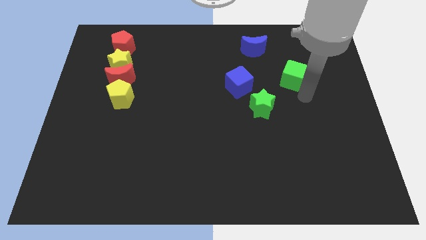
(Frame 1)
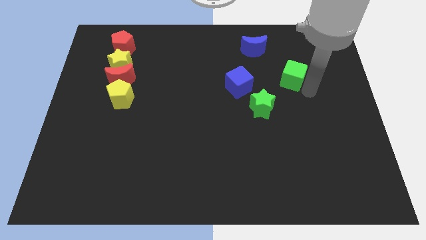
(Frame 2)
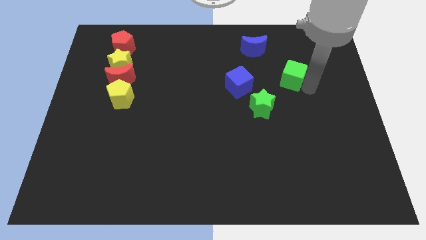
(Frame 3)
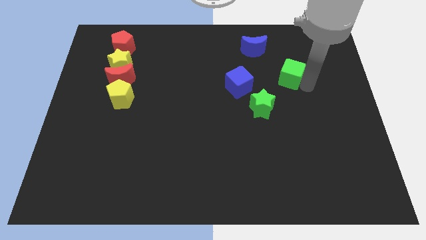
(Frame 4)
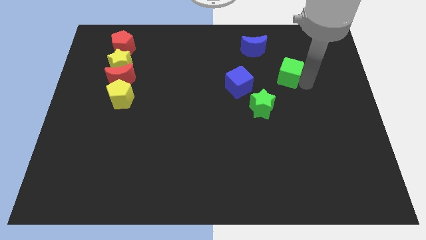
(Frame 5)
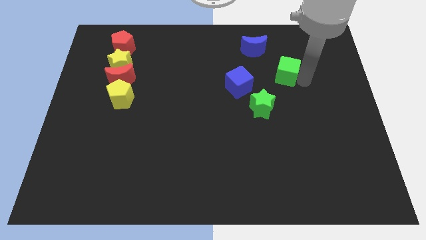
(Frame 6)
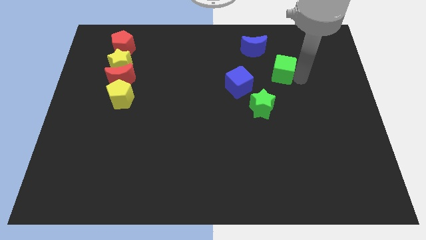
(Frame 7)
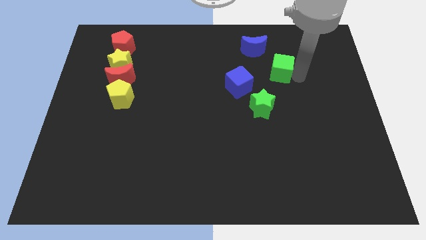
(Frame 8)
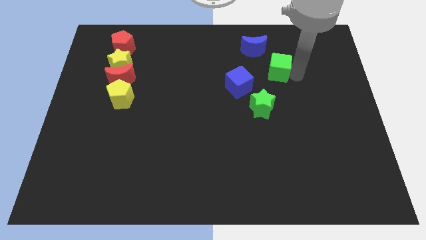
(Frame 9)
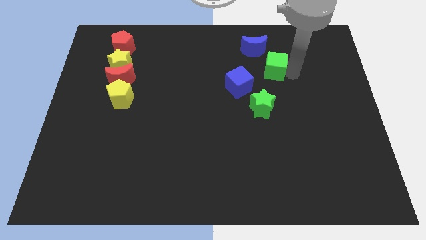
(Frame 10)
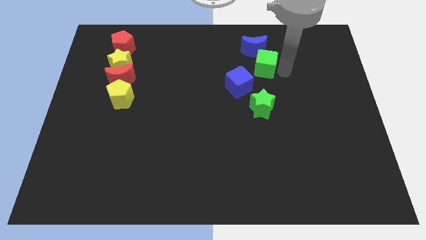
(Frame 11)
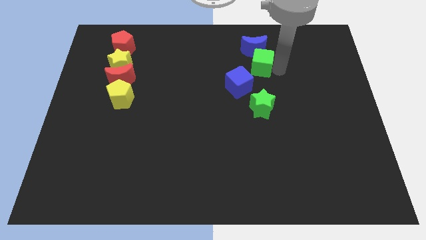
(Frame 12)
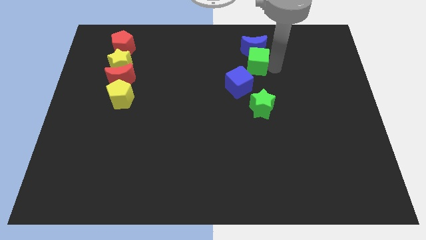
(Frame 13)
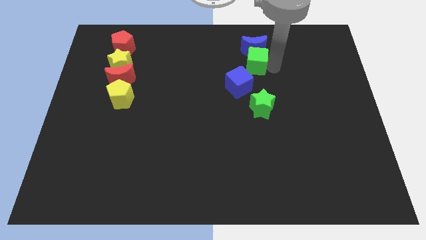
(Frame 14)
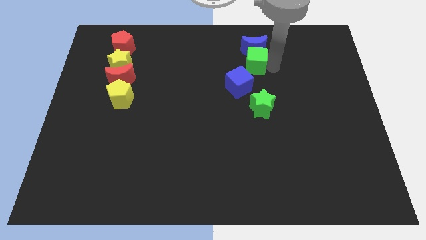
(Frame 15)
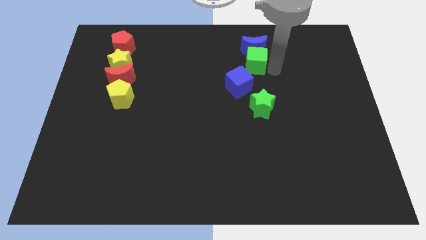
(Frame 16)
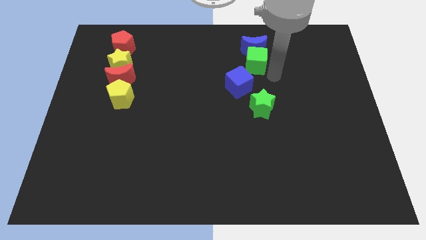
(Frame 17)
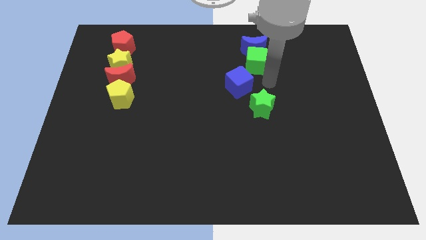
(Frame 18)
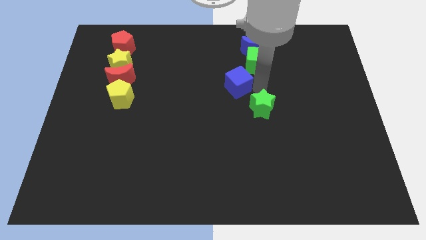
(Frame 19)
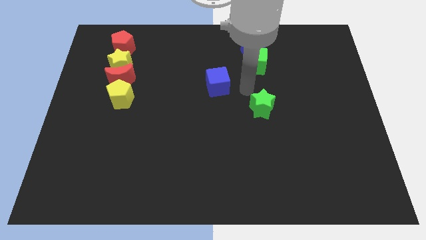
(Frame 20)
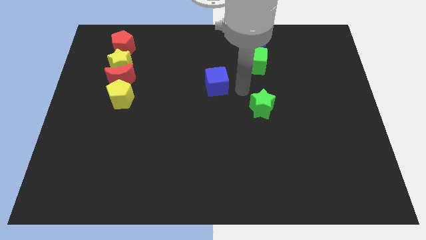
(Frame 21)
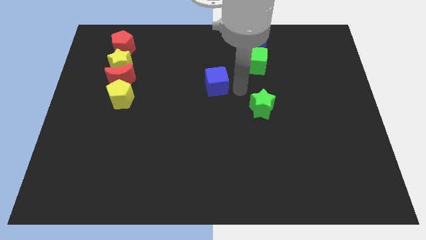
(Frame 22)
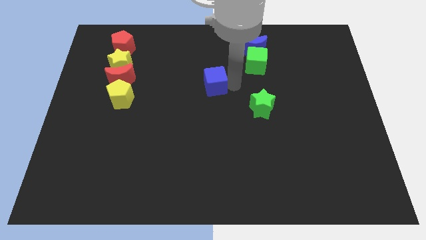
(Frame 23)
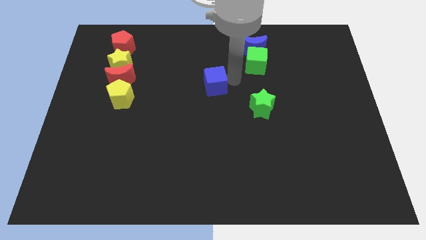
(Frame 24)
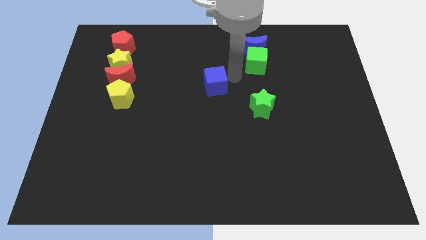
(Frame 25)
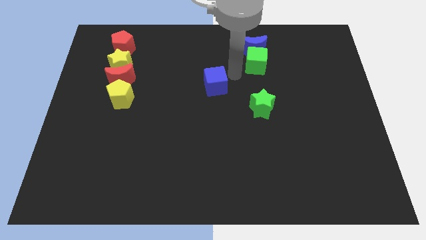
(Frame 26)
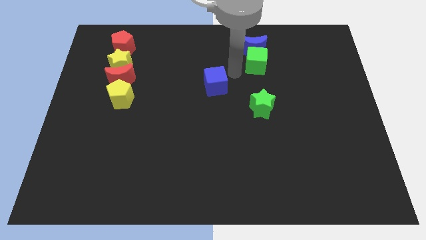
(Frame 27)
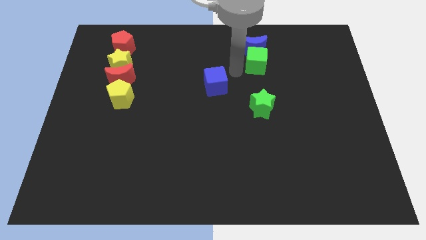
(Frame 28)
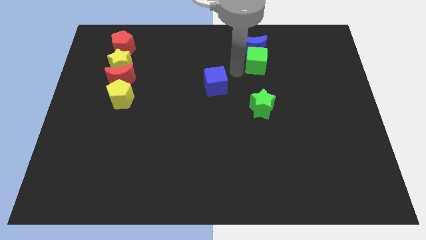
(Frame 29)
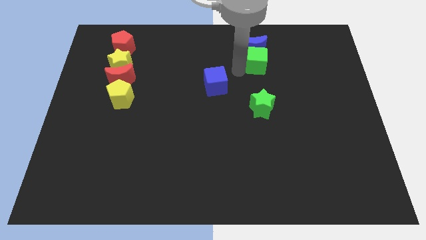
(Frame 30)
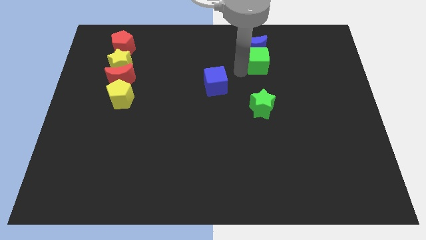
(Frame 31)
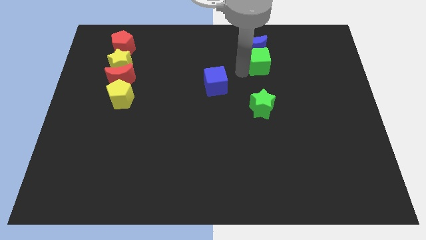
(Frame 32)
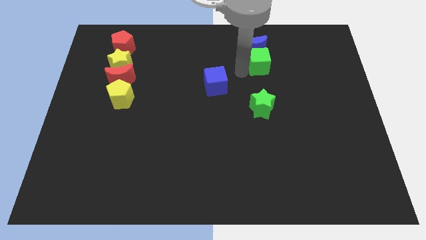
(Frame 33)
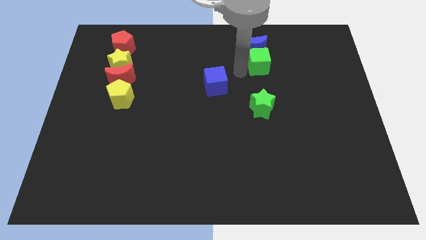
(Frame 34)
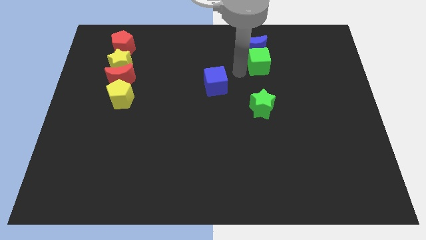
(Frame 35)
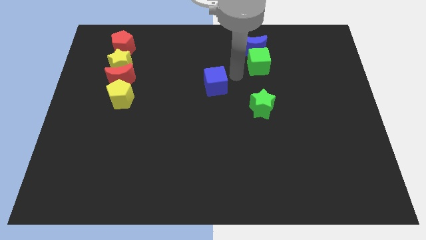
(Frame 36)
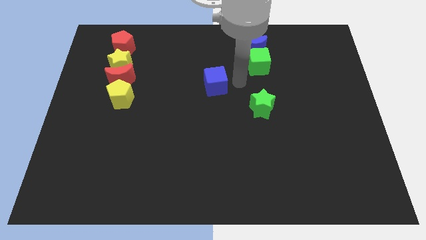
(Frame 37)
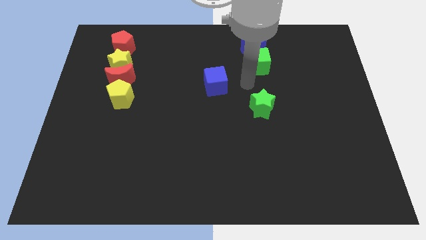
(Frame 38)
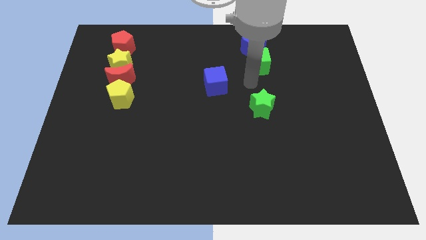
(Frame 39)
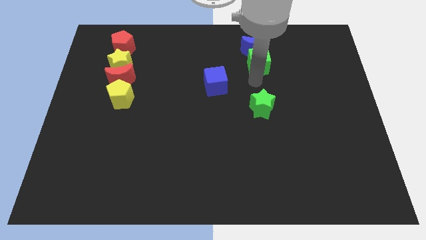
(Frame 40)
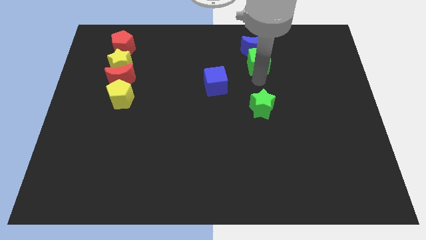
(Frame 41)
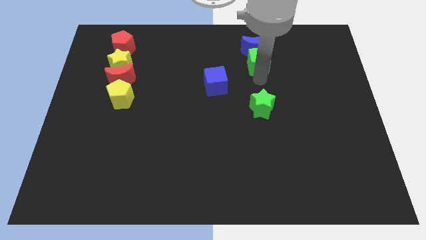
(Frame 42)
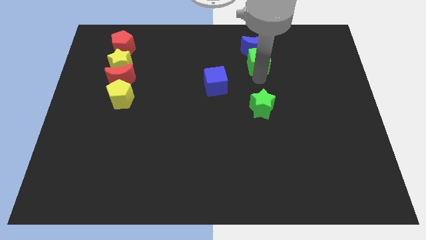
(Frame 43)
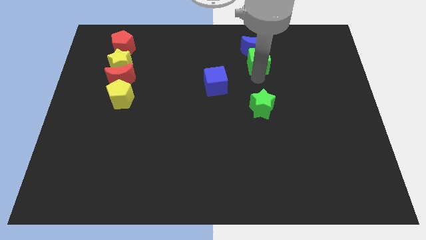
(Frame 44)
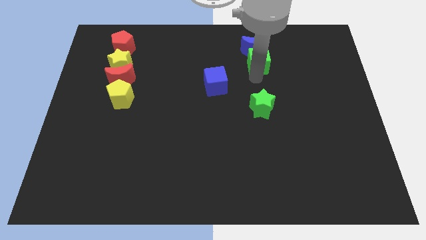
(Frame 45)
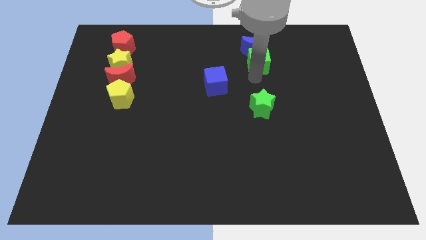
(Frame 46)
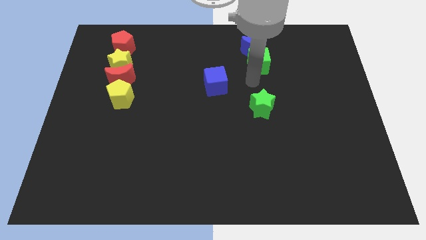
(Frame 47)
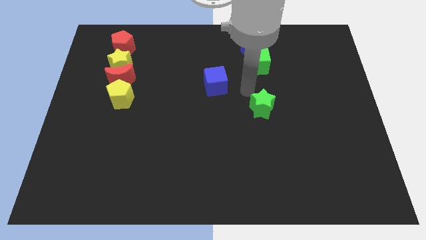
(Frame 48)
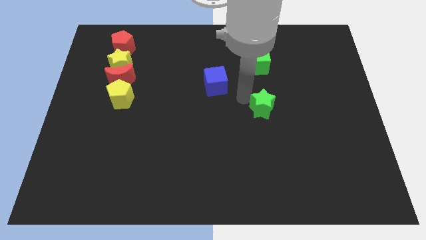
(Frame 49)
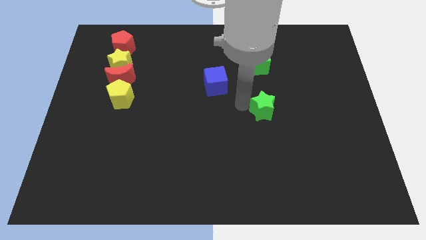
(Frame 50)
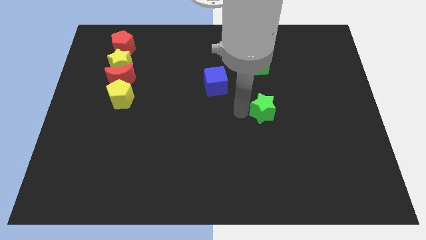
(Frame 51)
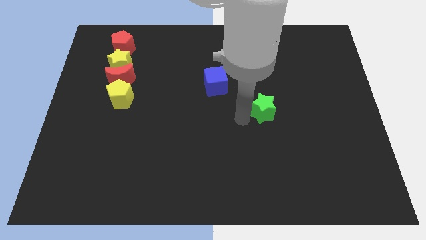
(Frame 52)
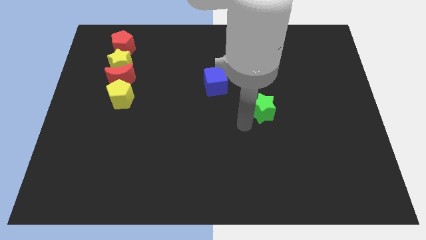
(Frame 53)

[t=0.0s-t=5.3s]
move the green cube below the blue crescent

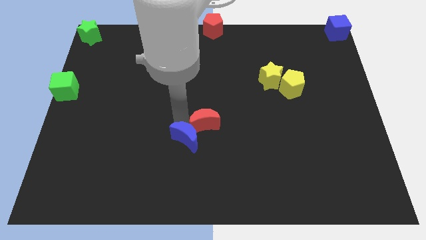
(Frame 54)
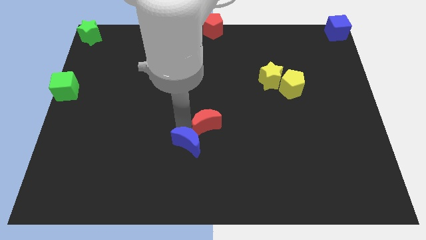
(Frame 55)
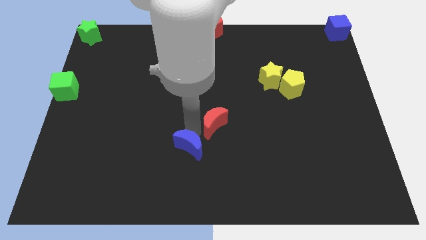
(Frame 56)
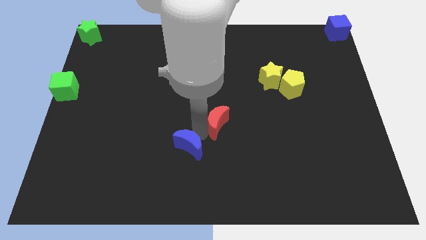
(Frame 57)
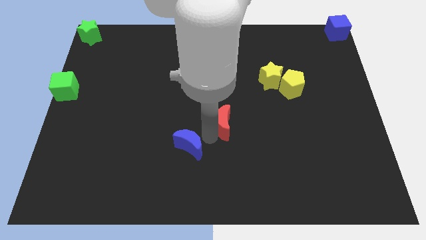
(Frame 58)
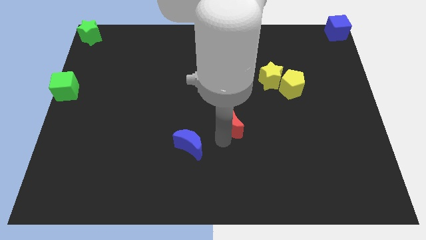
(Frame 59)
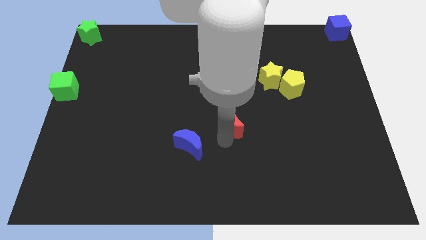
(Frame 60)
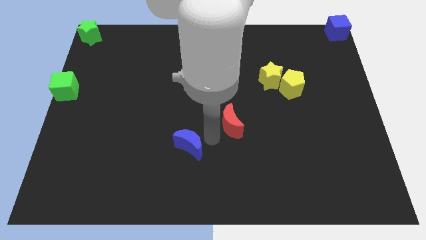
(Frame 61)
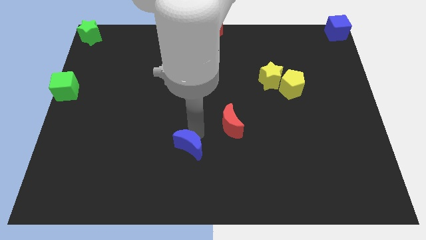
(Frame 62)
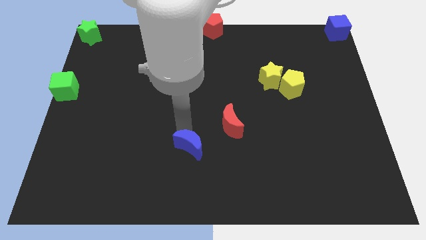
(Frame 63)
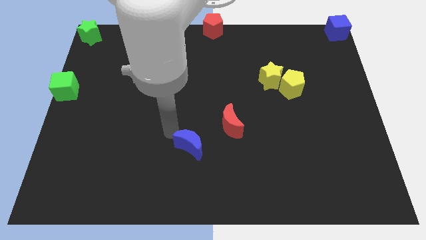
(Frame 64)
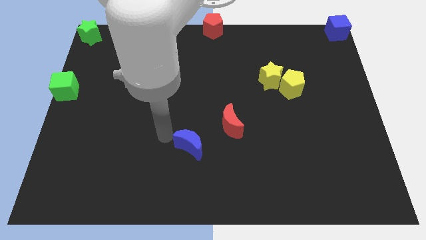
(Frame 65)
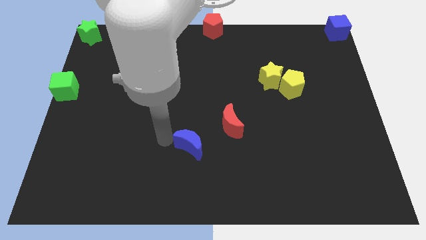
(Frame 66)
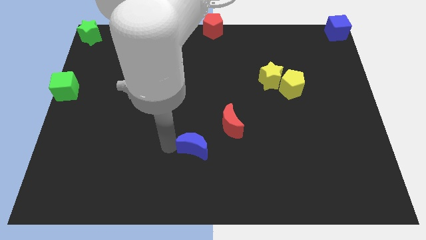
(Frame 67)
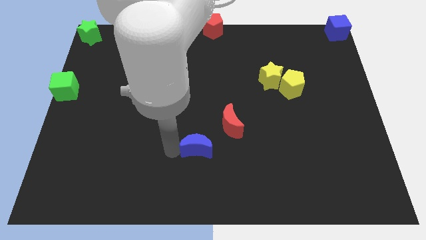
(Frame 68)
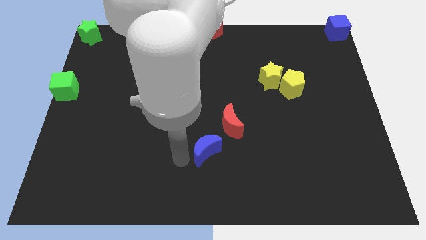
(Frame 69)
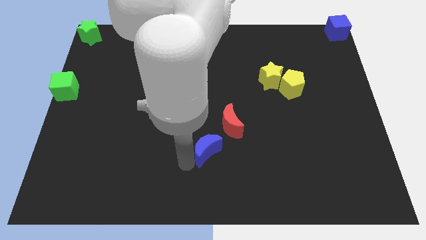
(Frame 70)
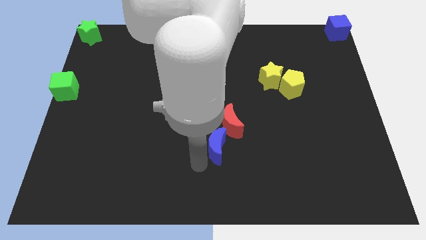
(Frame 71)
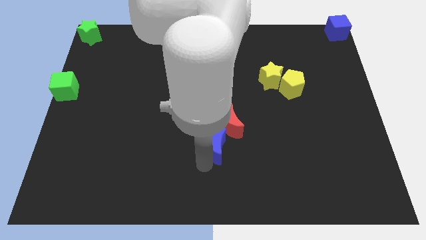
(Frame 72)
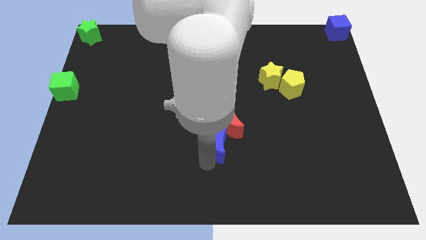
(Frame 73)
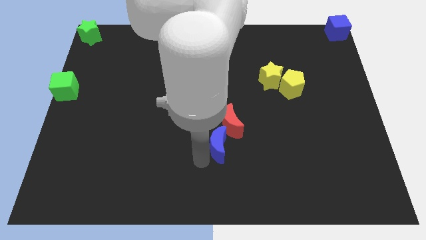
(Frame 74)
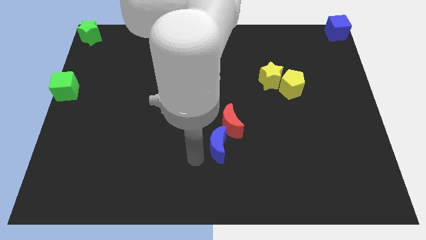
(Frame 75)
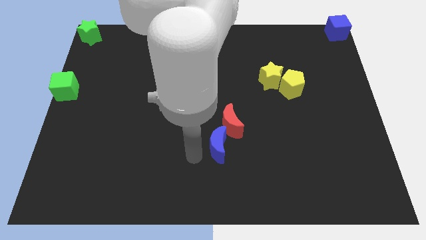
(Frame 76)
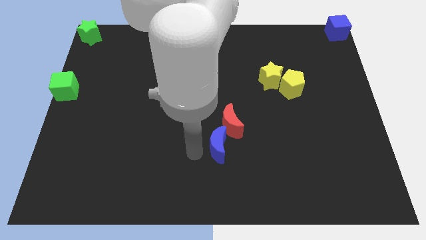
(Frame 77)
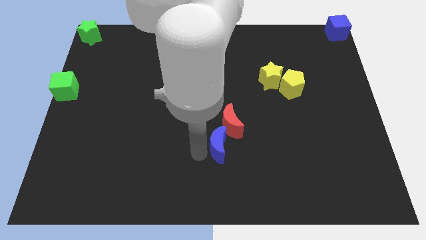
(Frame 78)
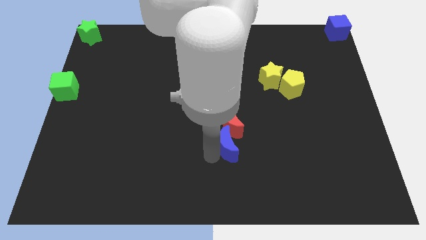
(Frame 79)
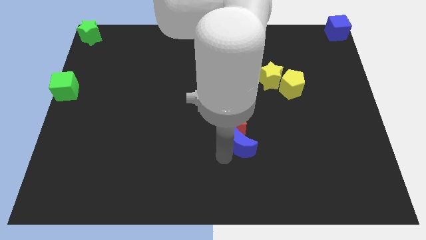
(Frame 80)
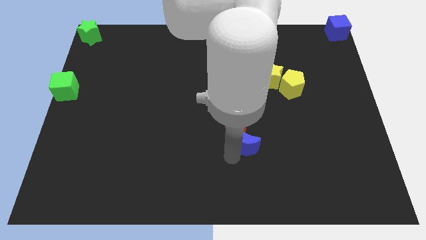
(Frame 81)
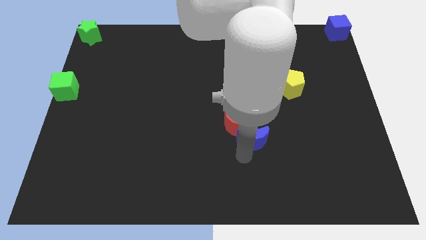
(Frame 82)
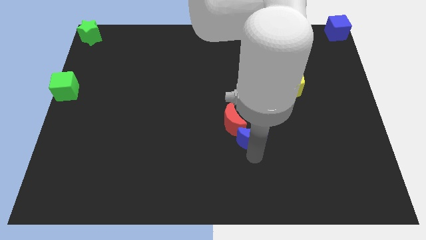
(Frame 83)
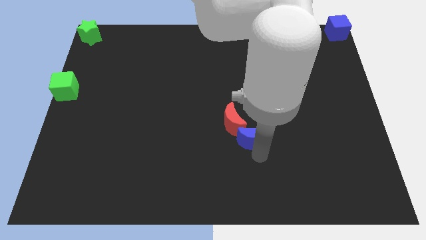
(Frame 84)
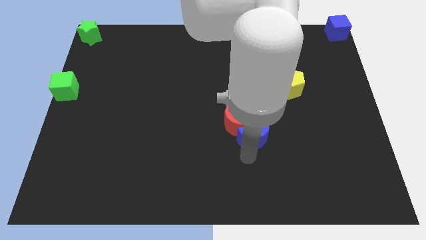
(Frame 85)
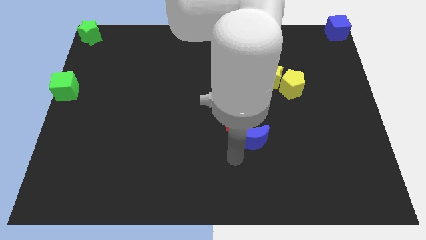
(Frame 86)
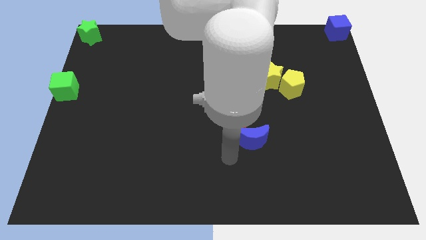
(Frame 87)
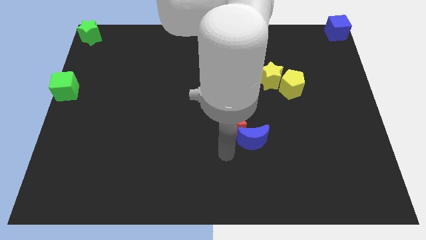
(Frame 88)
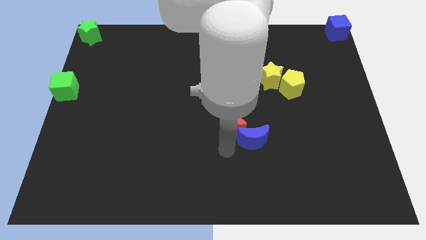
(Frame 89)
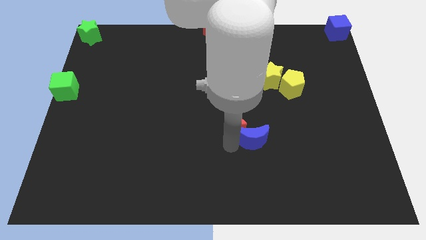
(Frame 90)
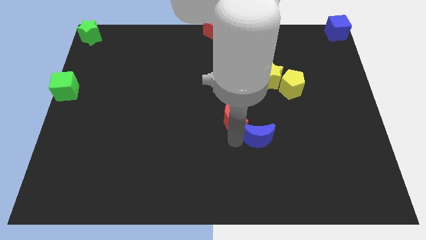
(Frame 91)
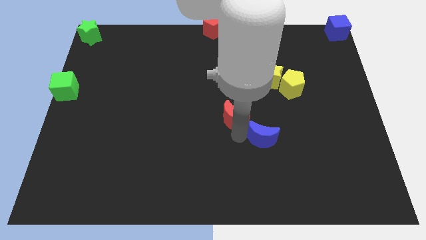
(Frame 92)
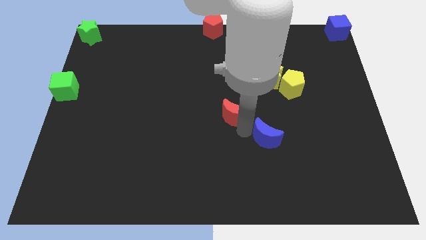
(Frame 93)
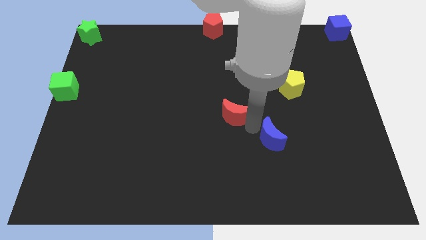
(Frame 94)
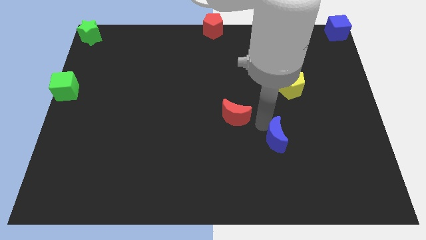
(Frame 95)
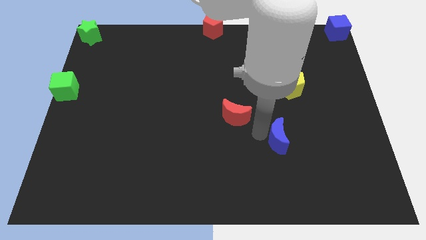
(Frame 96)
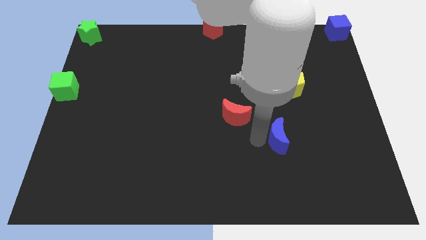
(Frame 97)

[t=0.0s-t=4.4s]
separate the red moon and blue moon
